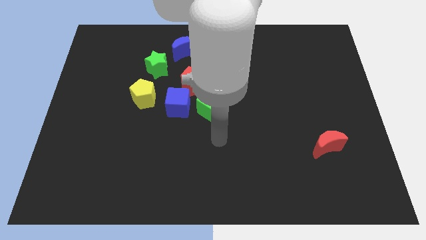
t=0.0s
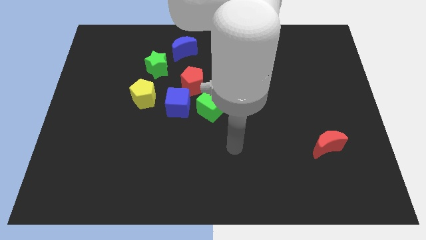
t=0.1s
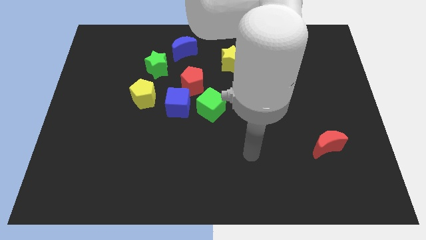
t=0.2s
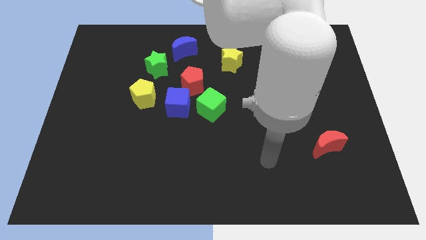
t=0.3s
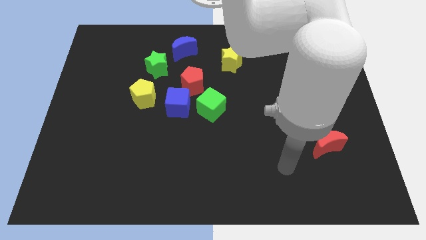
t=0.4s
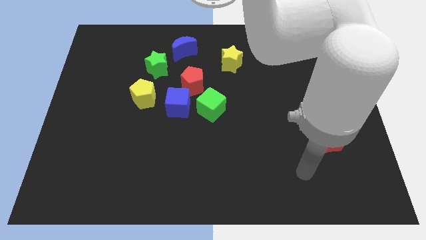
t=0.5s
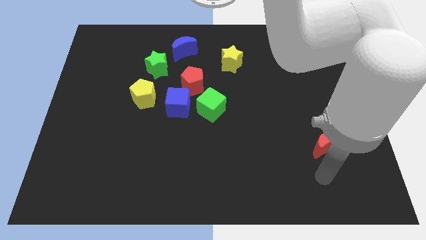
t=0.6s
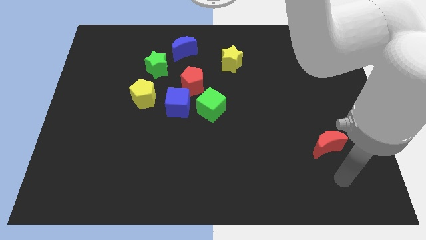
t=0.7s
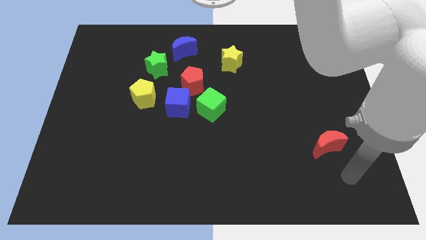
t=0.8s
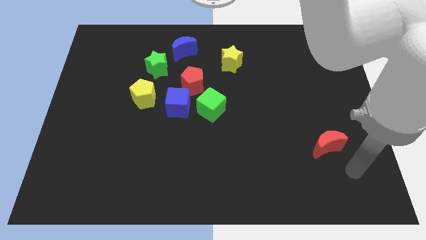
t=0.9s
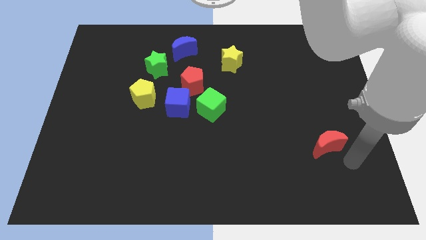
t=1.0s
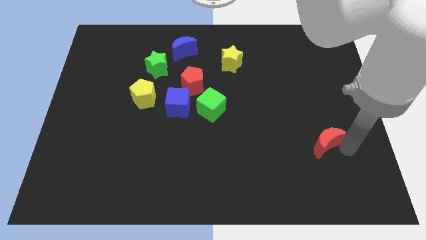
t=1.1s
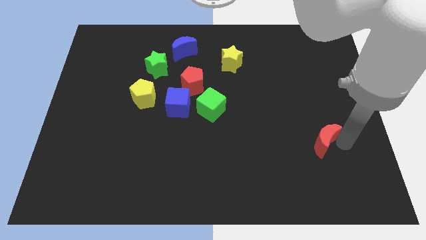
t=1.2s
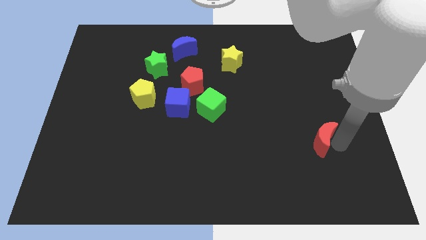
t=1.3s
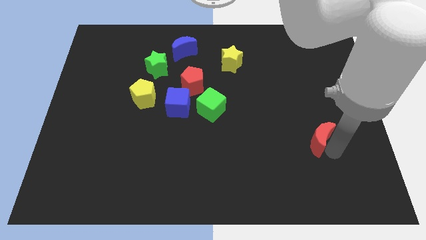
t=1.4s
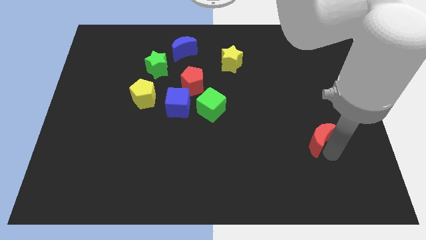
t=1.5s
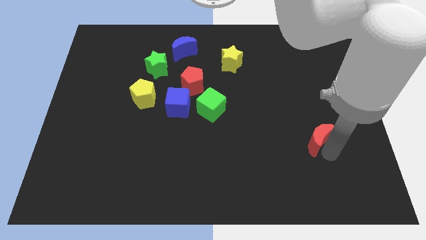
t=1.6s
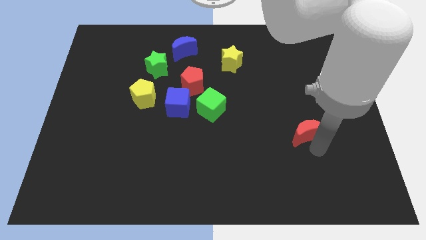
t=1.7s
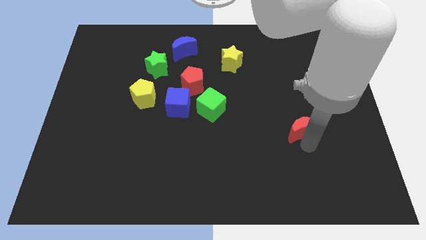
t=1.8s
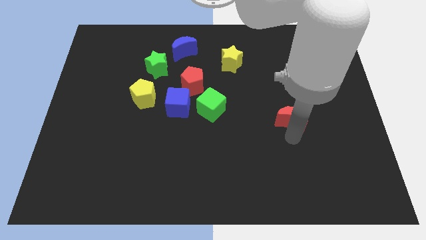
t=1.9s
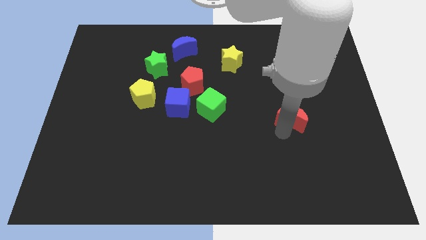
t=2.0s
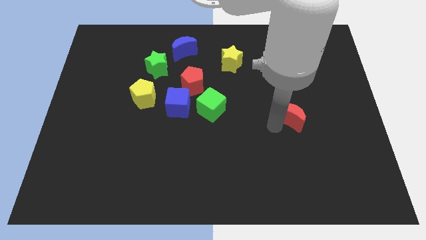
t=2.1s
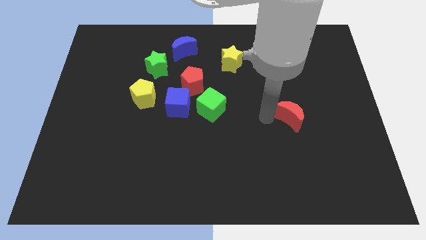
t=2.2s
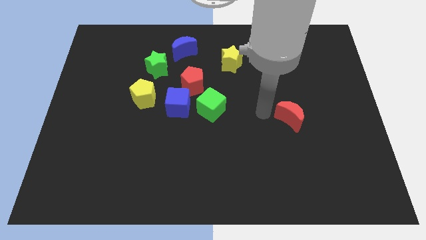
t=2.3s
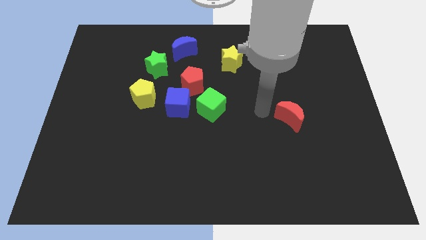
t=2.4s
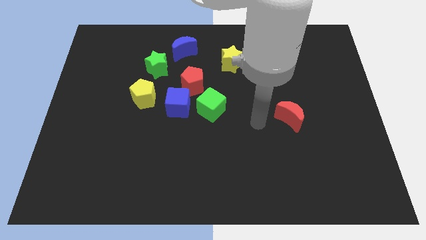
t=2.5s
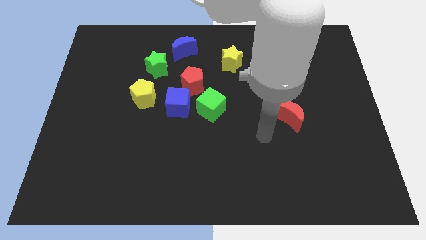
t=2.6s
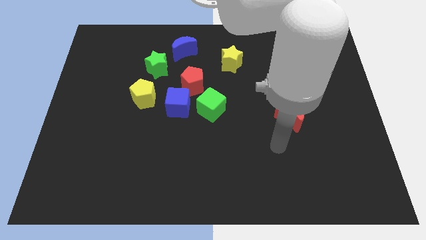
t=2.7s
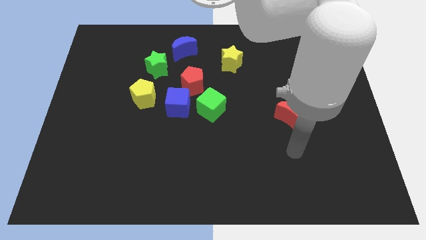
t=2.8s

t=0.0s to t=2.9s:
move redmoon towards center of the board

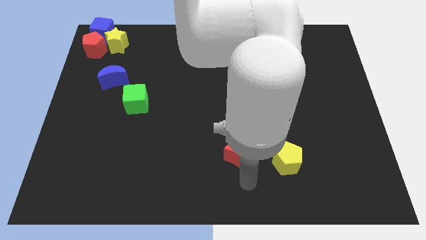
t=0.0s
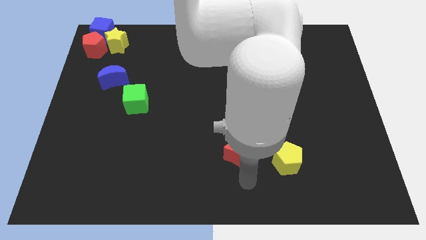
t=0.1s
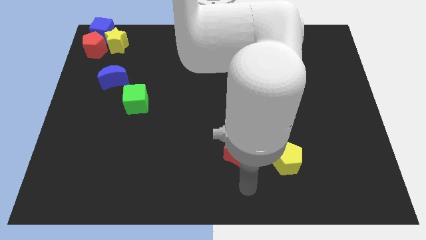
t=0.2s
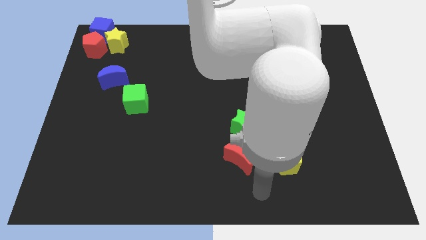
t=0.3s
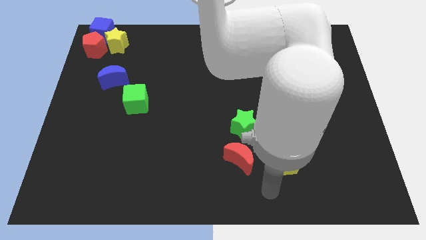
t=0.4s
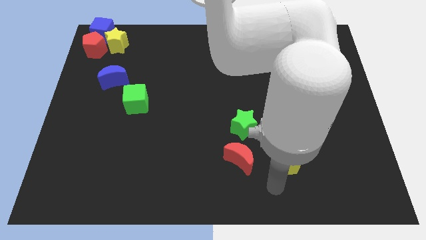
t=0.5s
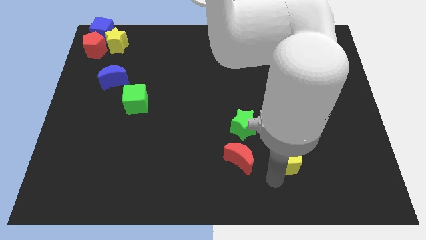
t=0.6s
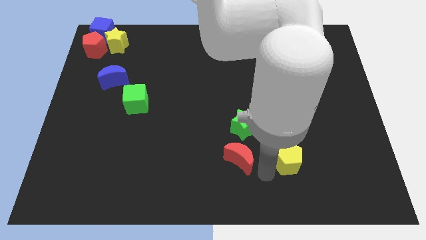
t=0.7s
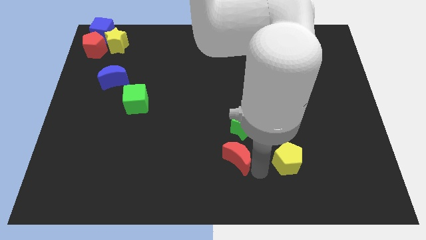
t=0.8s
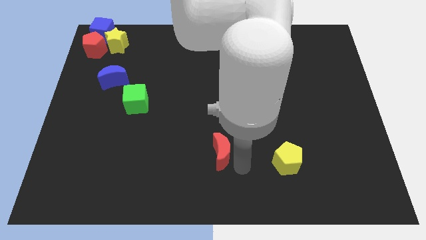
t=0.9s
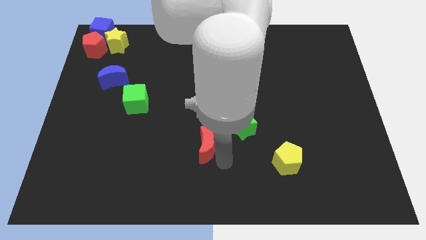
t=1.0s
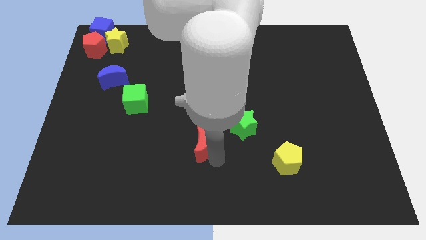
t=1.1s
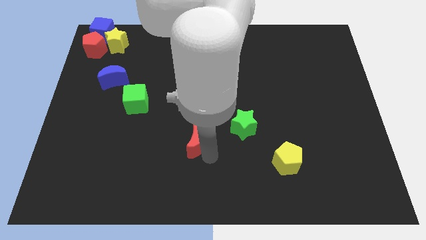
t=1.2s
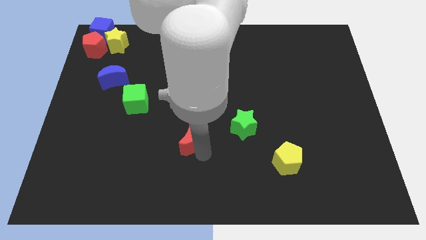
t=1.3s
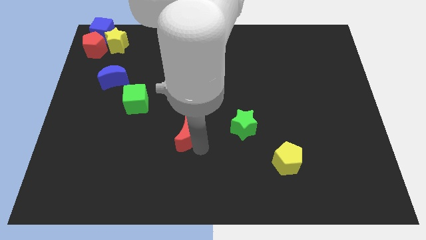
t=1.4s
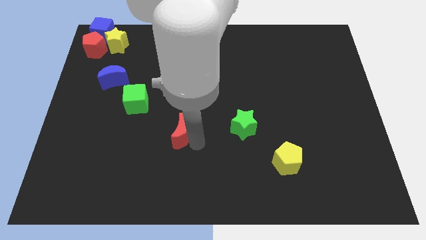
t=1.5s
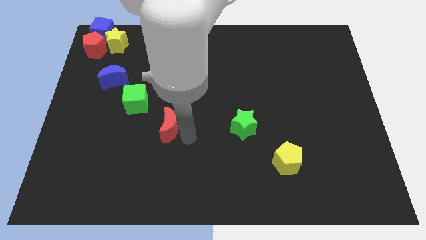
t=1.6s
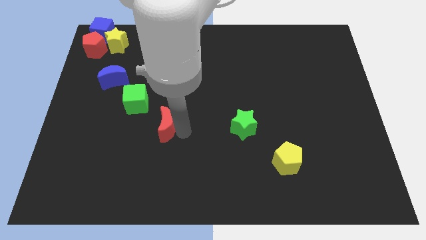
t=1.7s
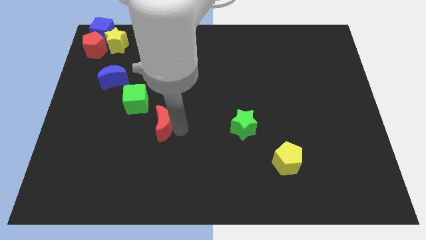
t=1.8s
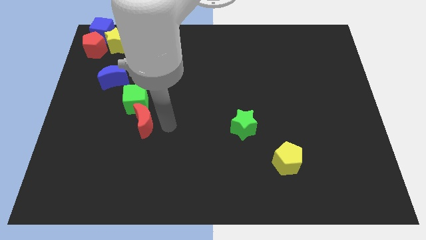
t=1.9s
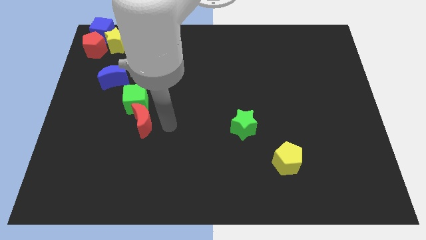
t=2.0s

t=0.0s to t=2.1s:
put the red crescent at the bottom of the green cube

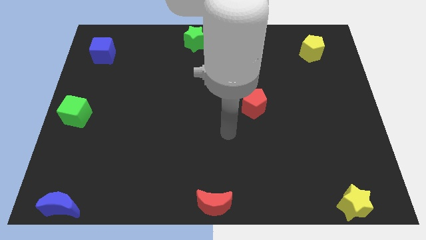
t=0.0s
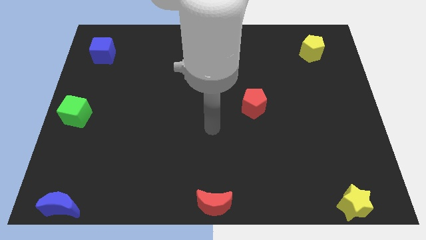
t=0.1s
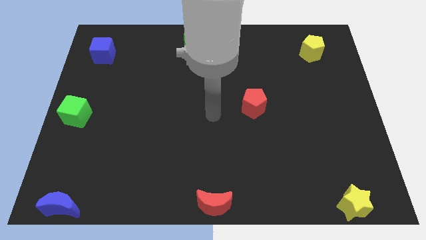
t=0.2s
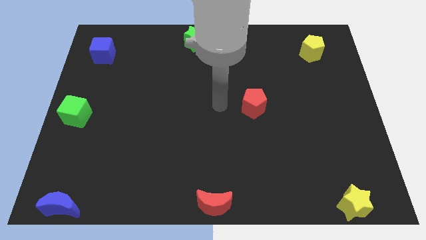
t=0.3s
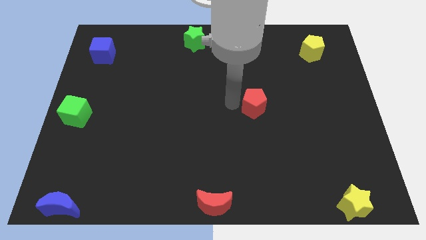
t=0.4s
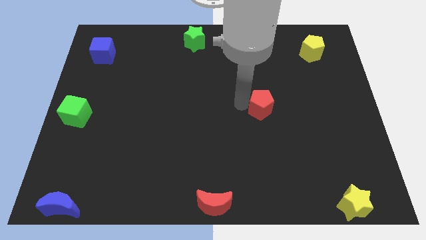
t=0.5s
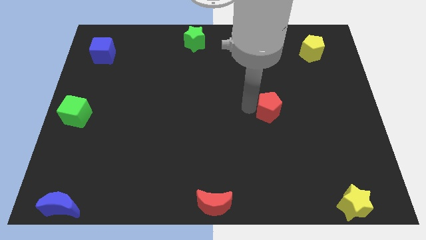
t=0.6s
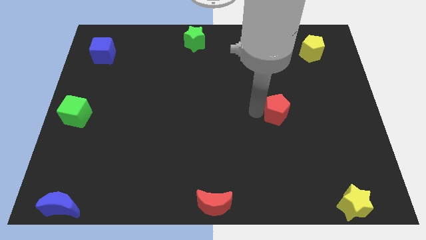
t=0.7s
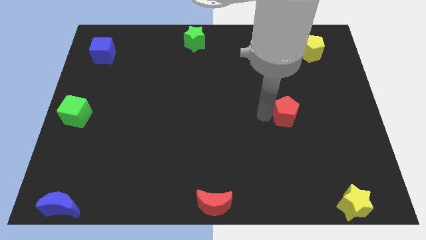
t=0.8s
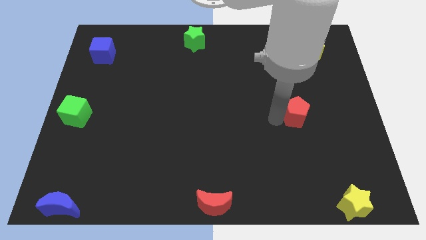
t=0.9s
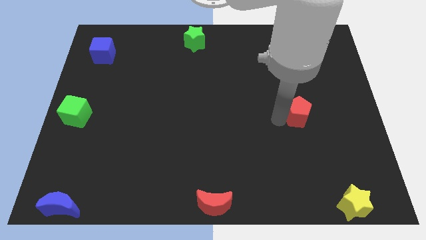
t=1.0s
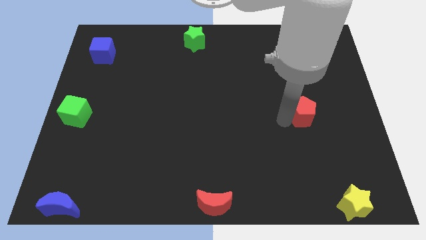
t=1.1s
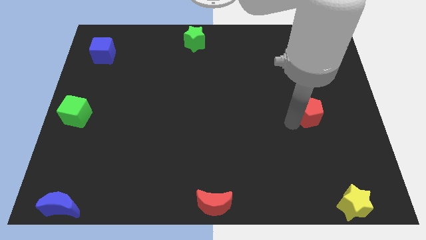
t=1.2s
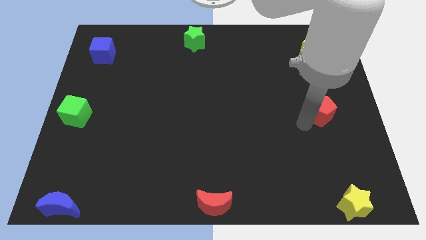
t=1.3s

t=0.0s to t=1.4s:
move the red pentagon to the right center of the board

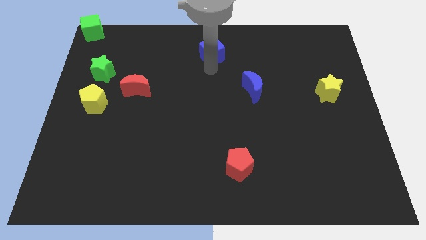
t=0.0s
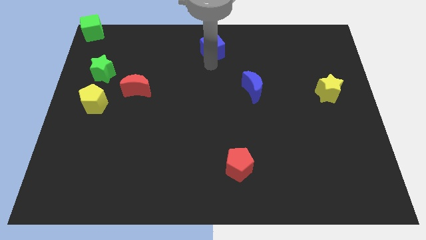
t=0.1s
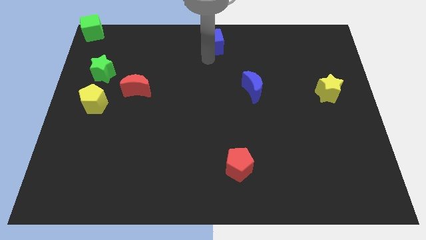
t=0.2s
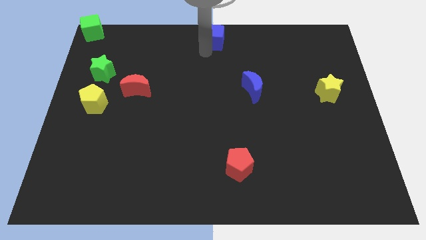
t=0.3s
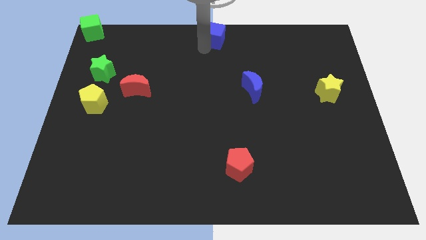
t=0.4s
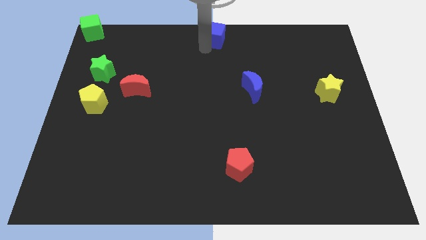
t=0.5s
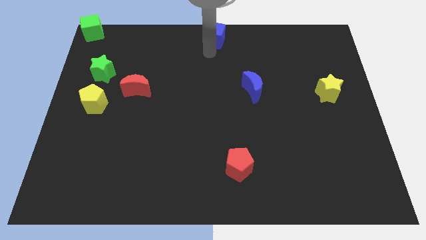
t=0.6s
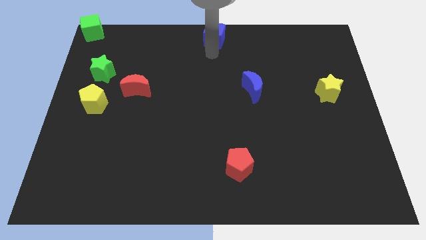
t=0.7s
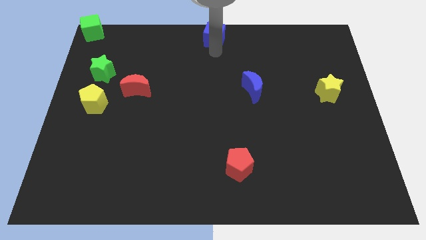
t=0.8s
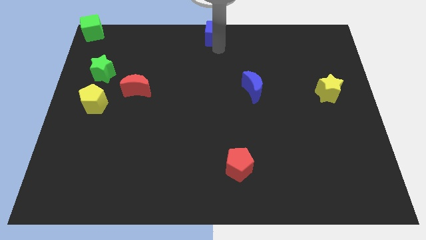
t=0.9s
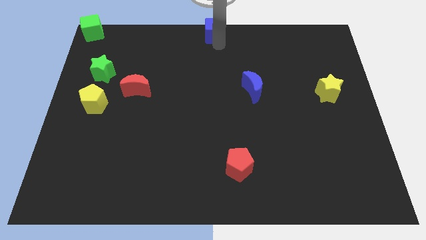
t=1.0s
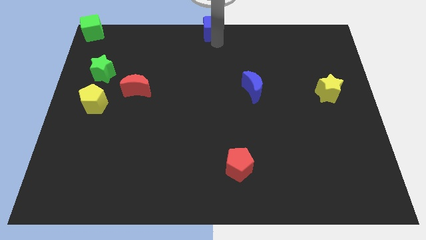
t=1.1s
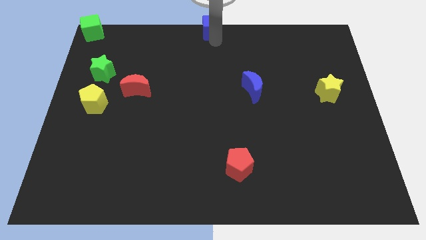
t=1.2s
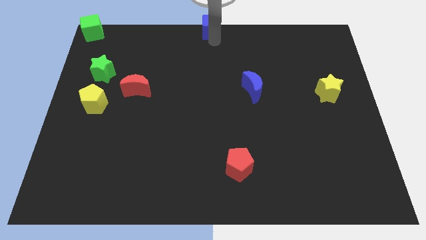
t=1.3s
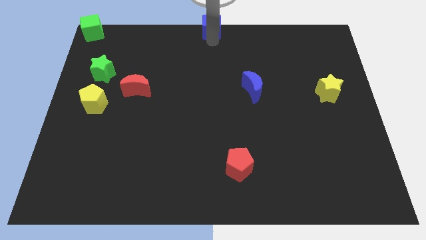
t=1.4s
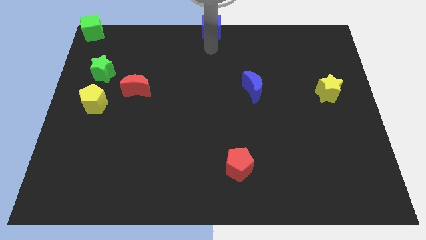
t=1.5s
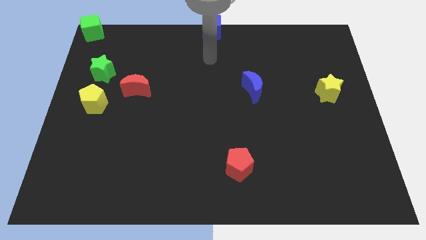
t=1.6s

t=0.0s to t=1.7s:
place the blue cube close to the top center of the board

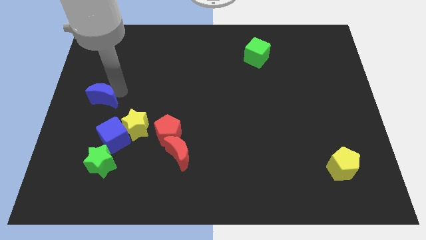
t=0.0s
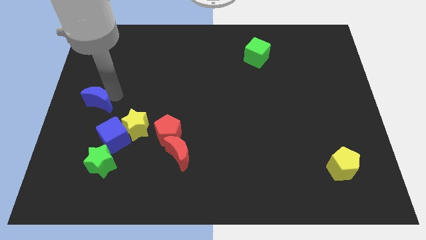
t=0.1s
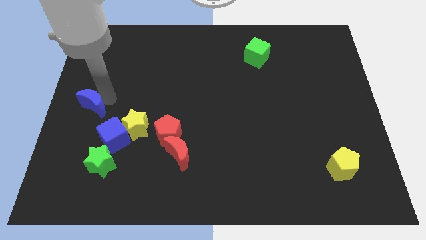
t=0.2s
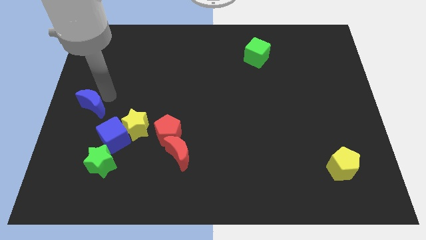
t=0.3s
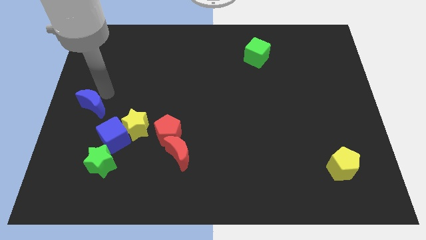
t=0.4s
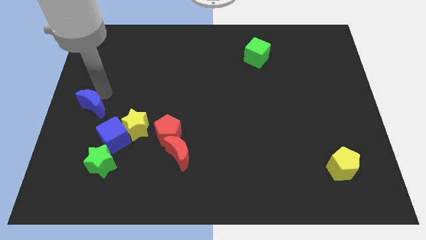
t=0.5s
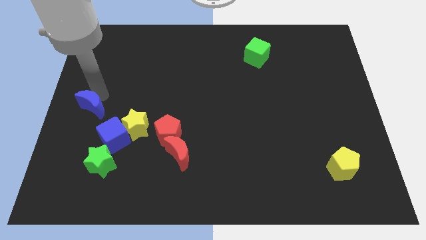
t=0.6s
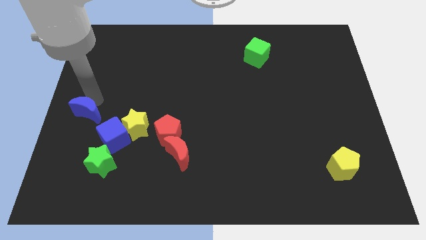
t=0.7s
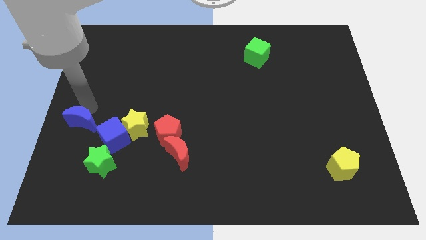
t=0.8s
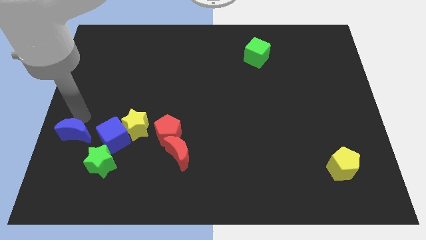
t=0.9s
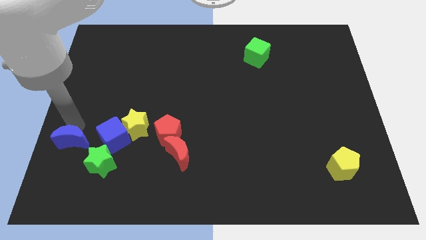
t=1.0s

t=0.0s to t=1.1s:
slide the blue crescent to the left side of the blue cube
